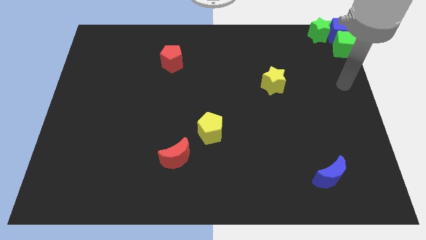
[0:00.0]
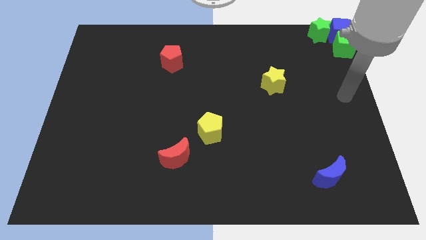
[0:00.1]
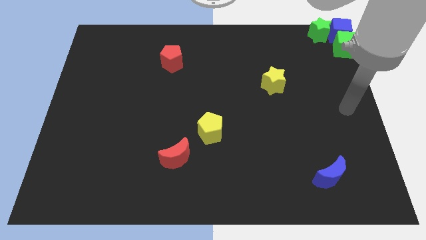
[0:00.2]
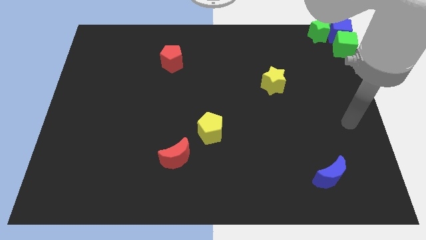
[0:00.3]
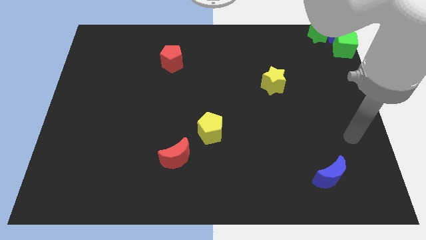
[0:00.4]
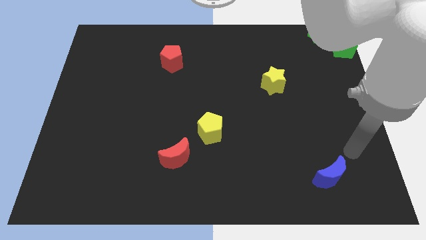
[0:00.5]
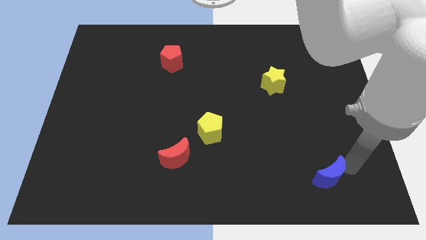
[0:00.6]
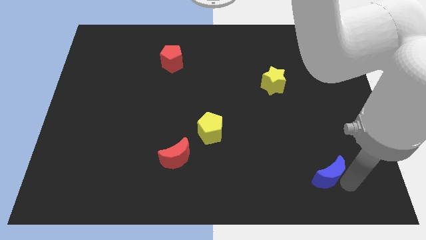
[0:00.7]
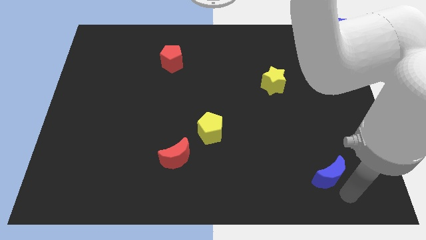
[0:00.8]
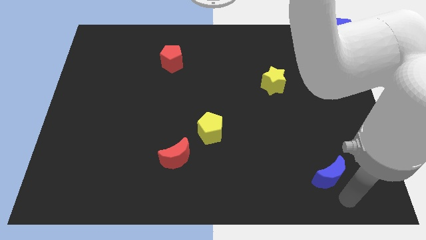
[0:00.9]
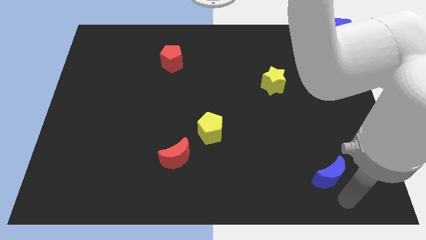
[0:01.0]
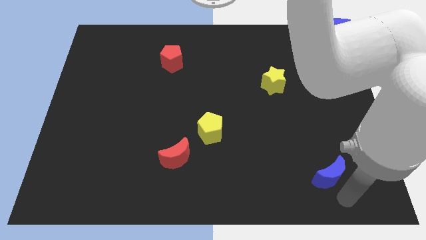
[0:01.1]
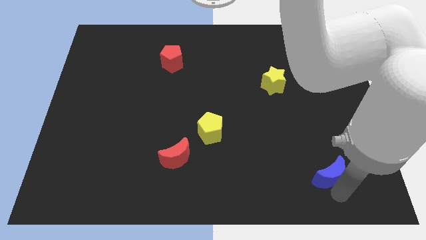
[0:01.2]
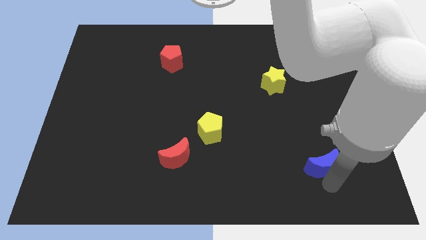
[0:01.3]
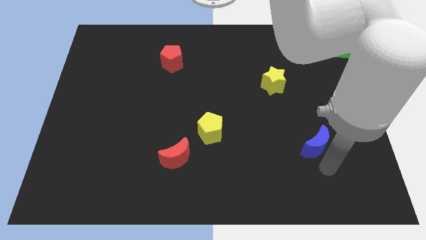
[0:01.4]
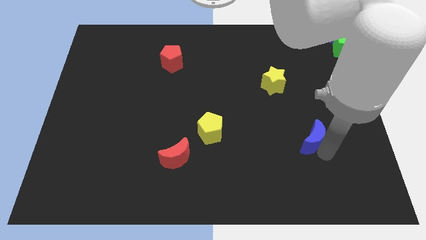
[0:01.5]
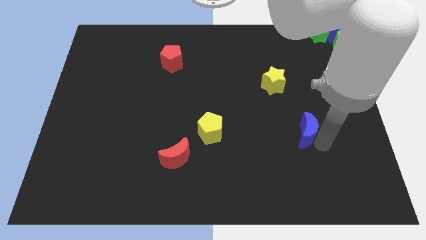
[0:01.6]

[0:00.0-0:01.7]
push the blue moon to the bottom right side of the yellow star

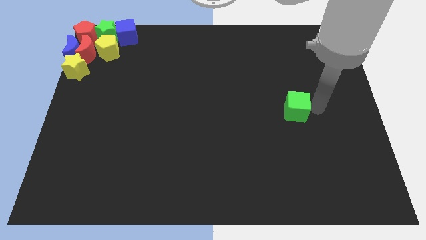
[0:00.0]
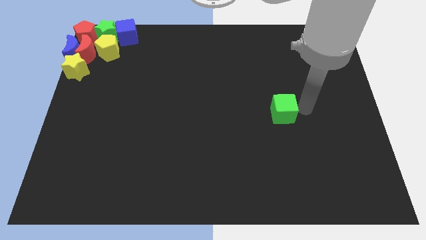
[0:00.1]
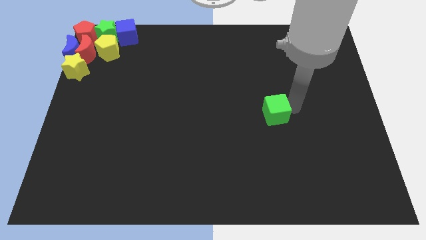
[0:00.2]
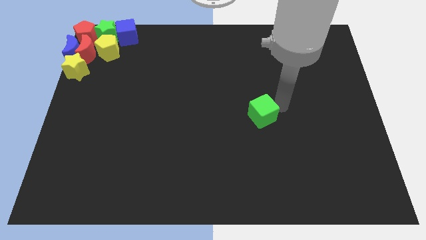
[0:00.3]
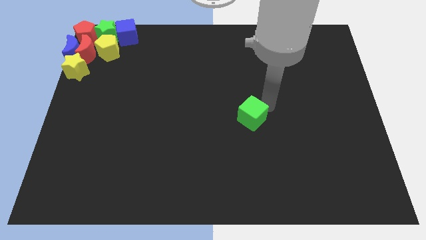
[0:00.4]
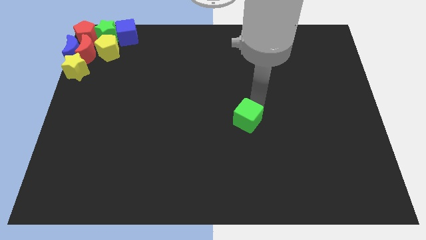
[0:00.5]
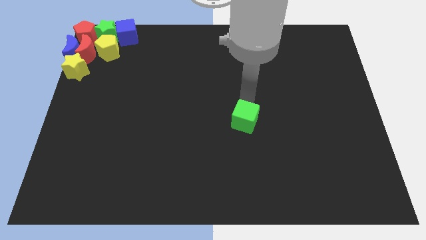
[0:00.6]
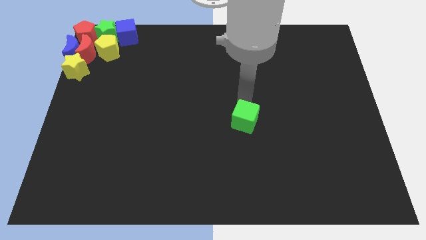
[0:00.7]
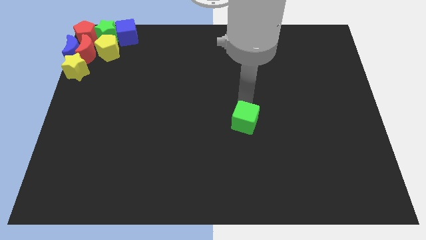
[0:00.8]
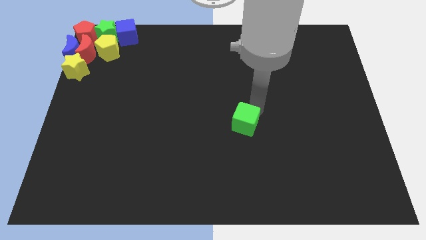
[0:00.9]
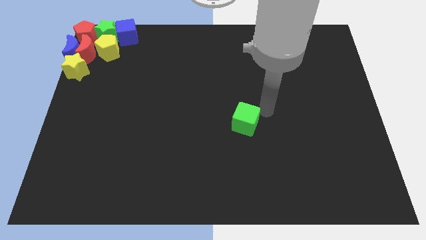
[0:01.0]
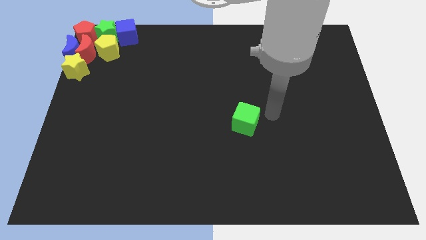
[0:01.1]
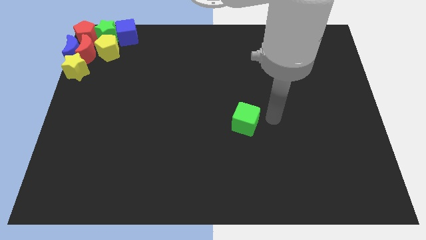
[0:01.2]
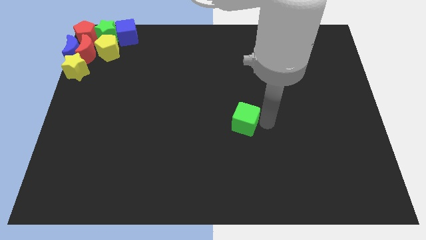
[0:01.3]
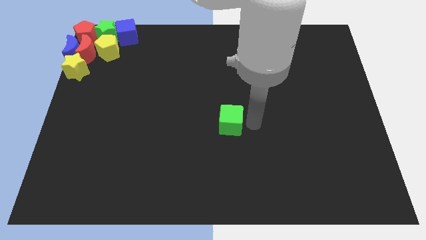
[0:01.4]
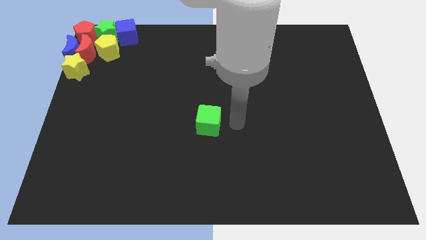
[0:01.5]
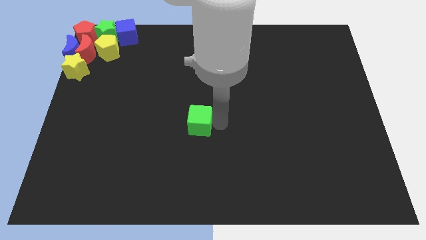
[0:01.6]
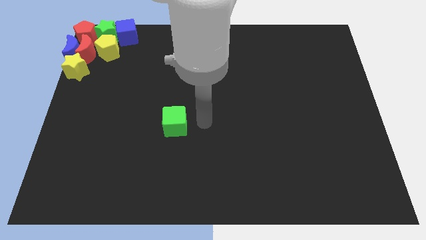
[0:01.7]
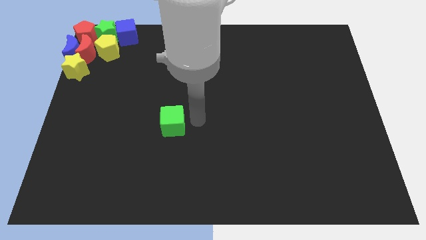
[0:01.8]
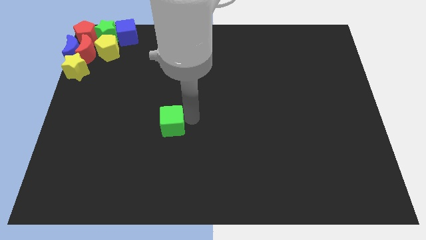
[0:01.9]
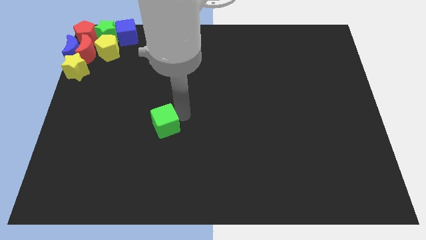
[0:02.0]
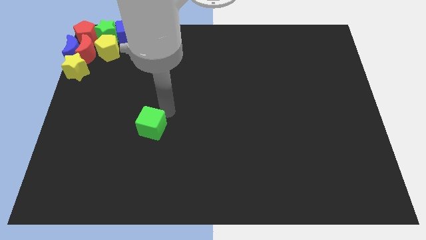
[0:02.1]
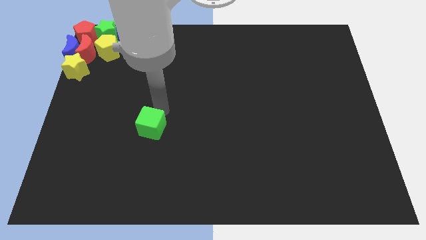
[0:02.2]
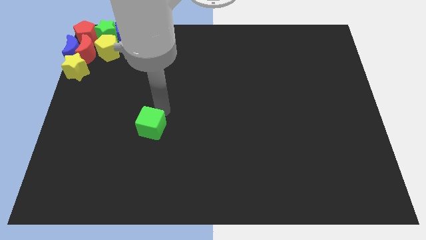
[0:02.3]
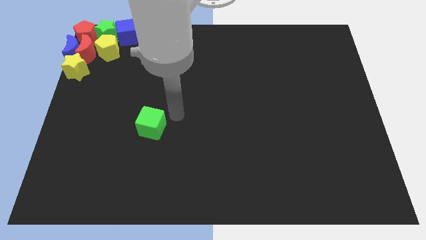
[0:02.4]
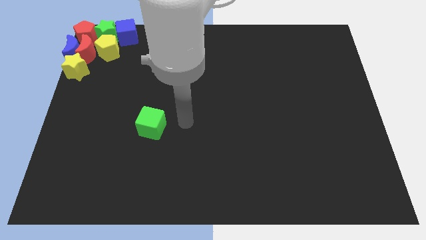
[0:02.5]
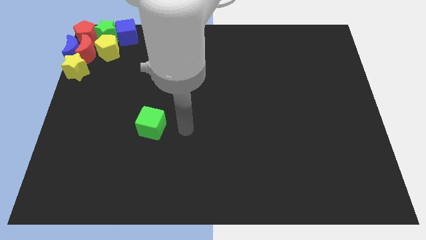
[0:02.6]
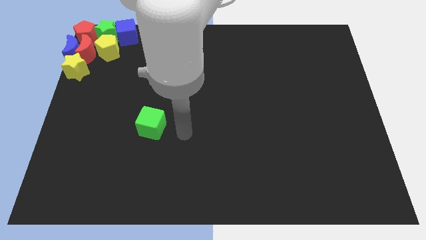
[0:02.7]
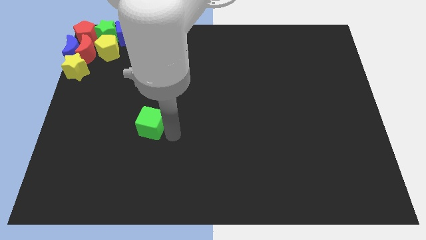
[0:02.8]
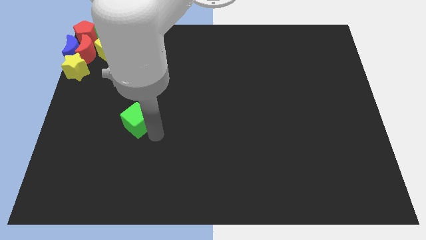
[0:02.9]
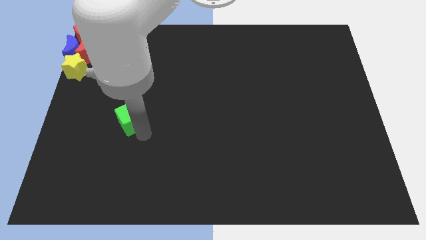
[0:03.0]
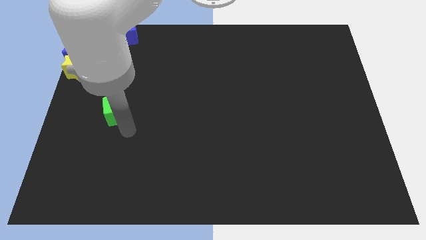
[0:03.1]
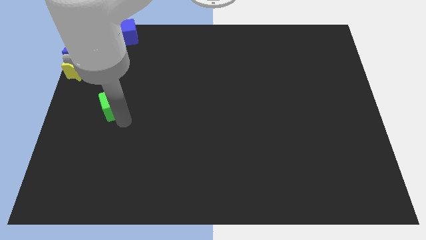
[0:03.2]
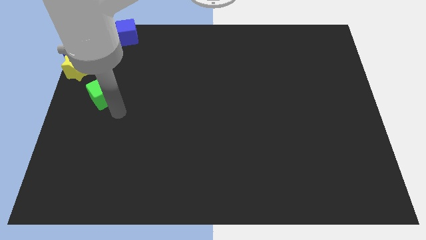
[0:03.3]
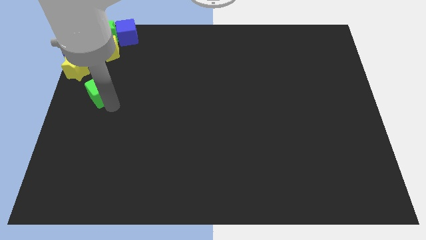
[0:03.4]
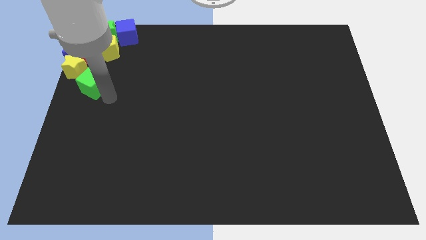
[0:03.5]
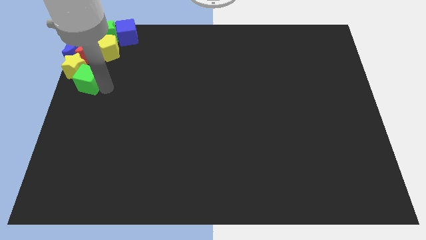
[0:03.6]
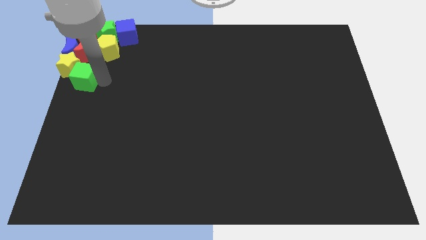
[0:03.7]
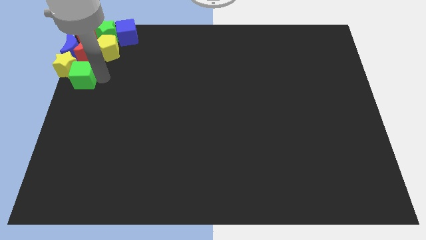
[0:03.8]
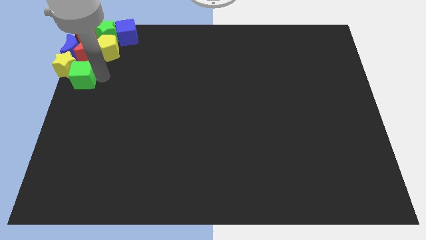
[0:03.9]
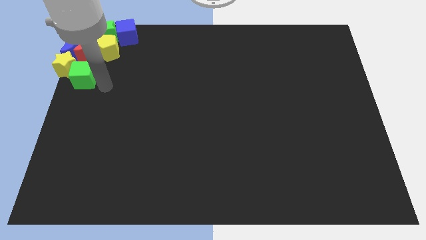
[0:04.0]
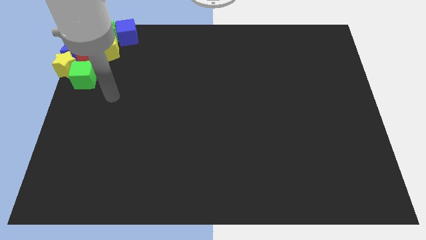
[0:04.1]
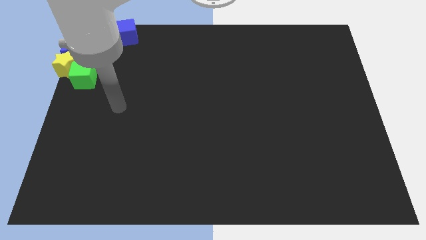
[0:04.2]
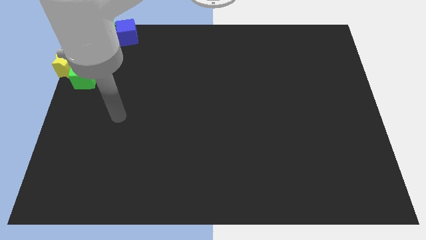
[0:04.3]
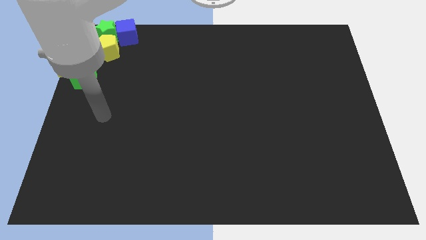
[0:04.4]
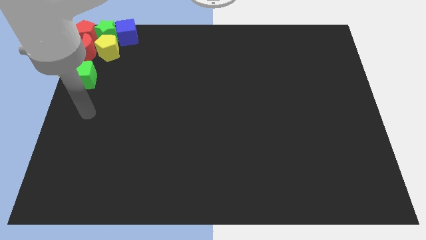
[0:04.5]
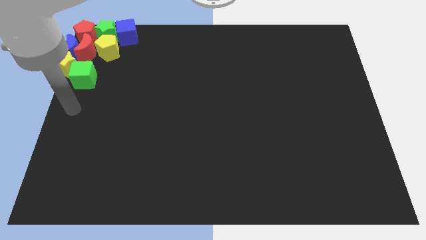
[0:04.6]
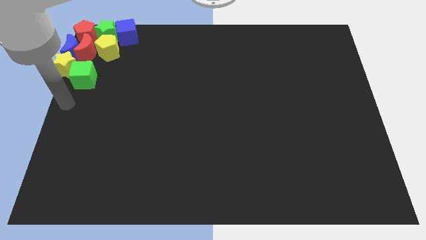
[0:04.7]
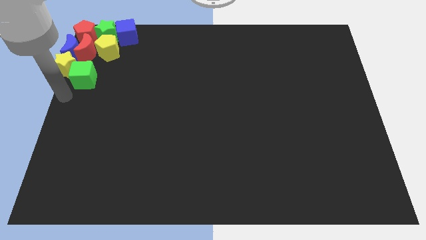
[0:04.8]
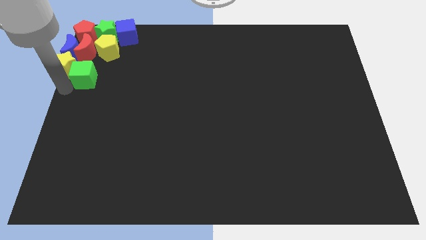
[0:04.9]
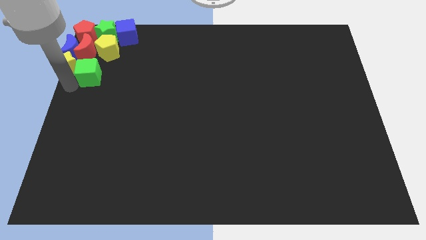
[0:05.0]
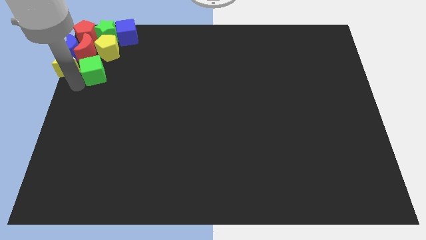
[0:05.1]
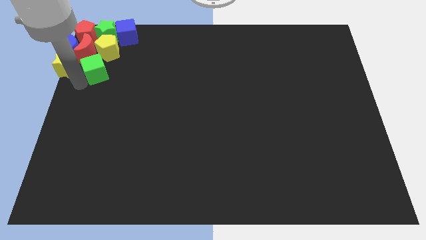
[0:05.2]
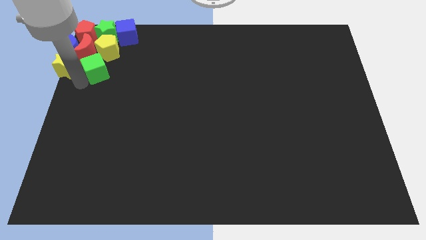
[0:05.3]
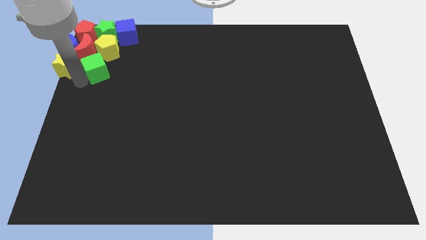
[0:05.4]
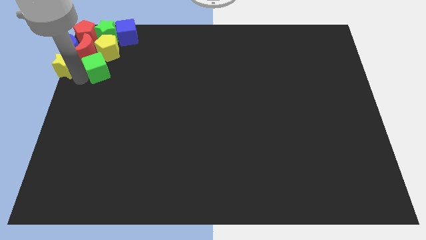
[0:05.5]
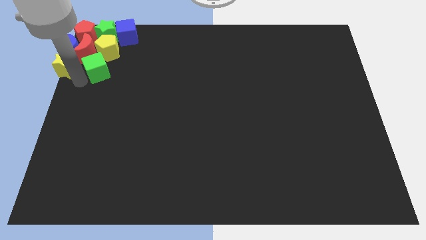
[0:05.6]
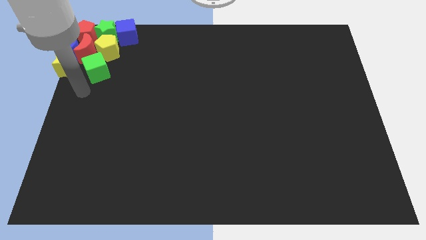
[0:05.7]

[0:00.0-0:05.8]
move the green cube at the right side of the yellow star

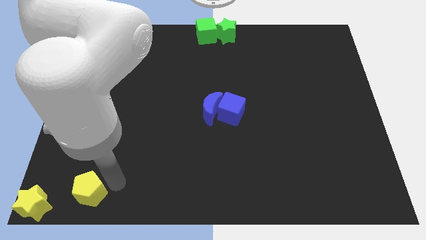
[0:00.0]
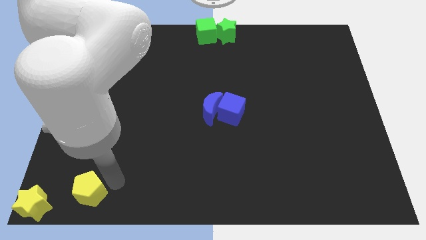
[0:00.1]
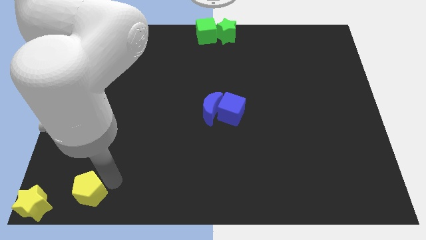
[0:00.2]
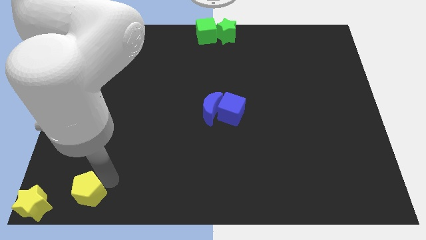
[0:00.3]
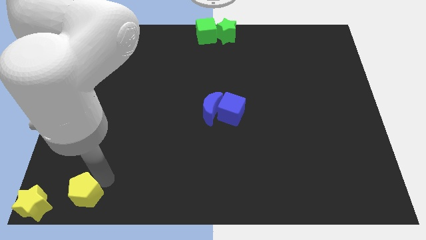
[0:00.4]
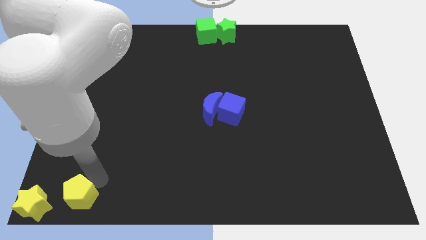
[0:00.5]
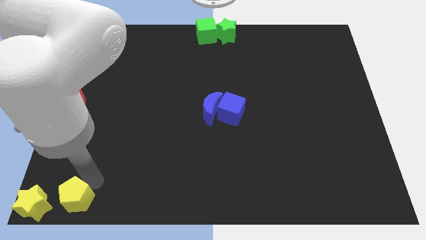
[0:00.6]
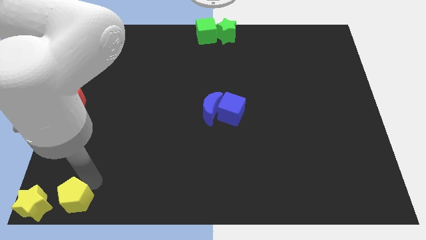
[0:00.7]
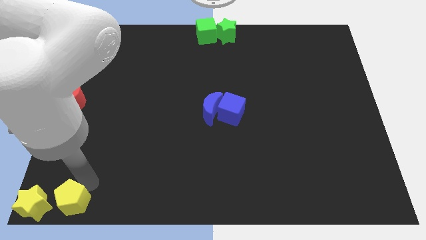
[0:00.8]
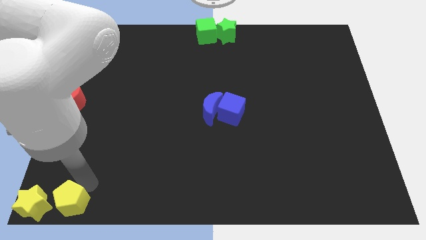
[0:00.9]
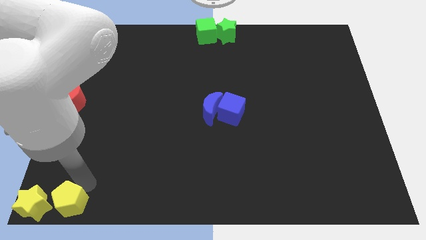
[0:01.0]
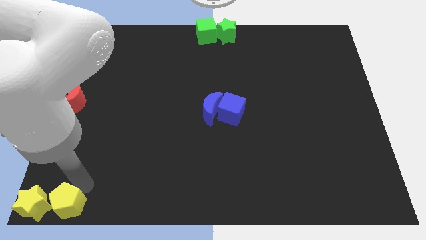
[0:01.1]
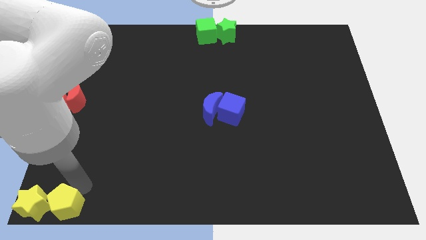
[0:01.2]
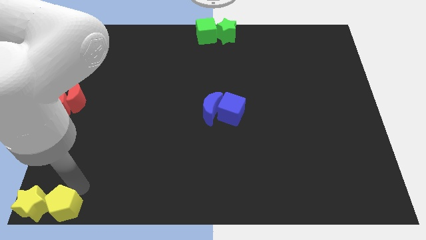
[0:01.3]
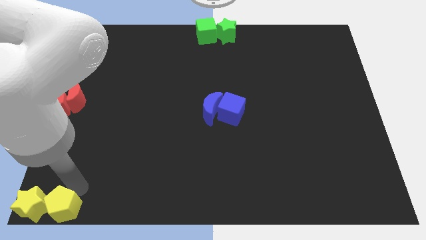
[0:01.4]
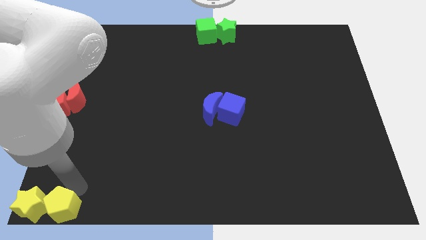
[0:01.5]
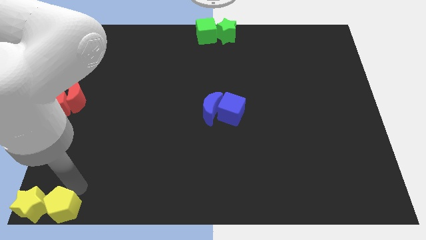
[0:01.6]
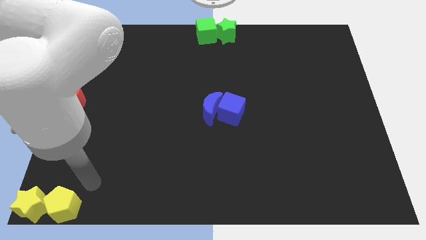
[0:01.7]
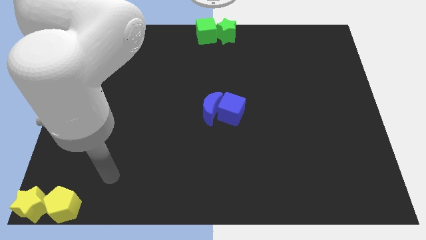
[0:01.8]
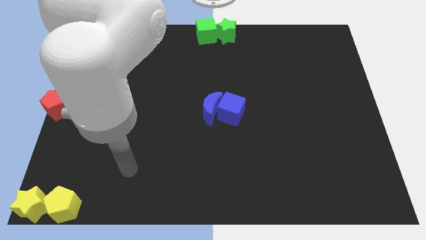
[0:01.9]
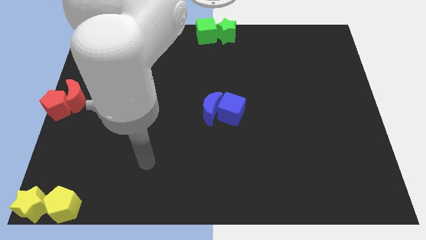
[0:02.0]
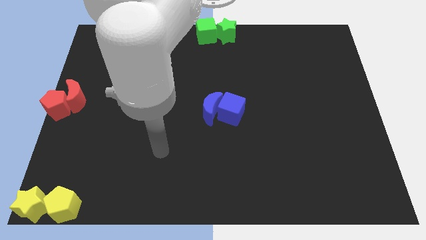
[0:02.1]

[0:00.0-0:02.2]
place the yellow pentagon right to the yellow star
